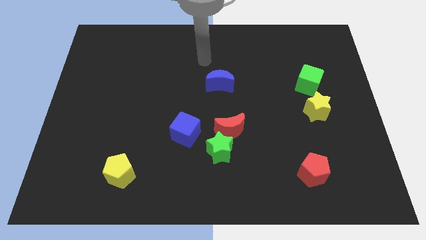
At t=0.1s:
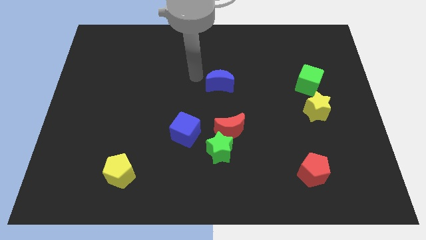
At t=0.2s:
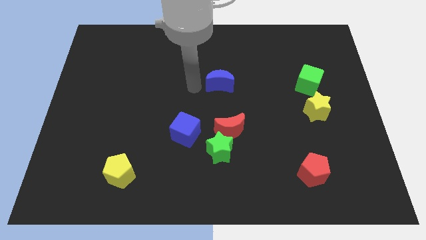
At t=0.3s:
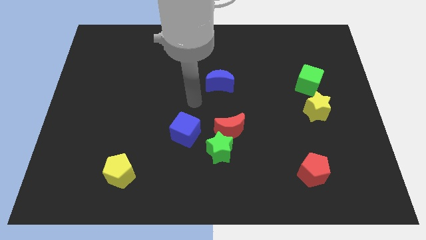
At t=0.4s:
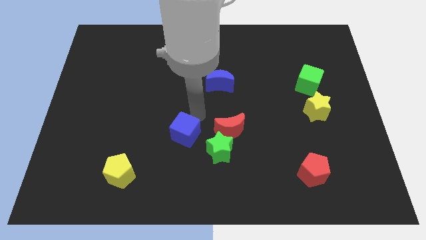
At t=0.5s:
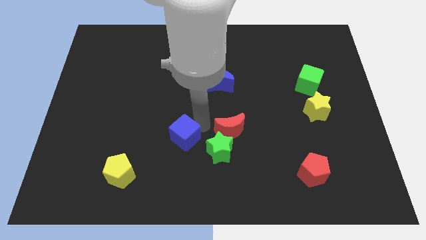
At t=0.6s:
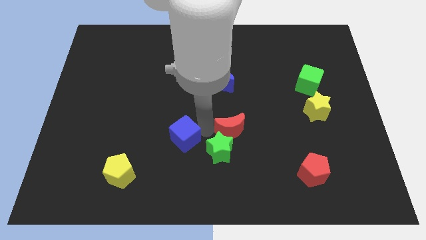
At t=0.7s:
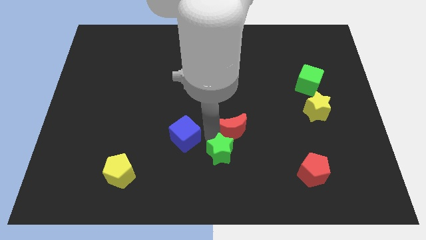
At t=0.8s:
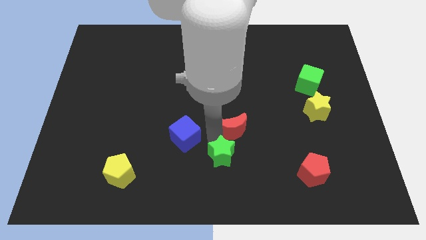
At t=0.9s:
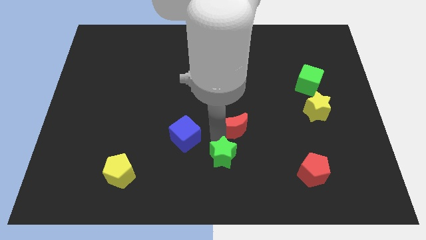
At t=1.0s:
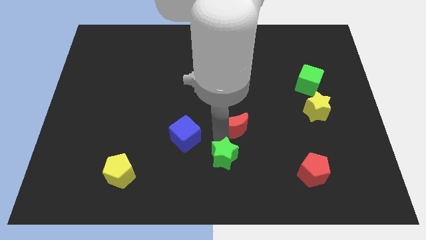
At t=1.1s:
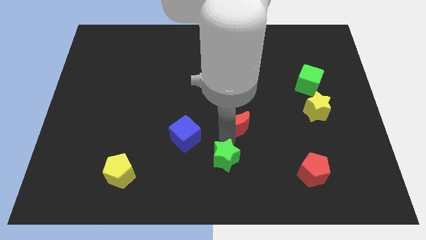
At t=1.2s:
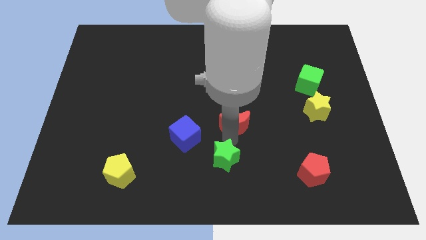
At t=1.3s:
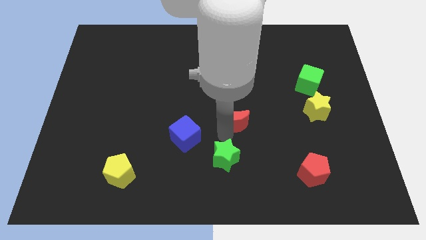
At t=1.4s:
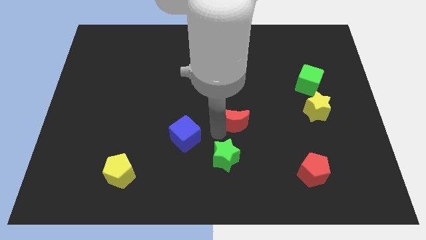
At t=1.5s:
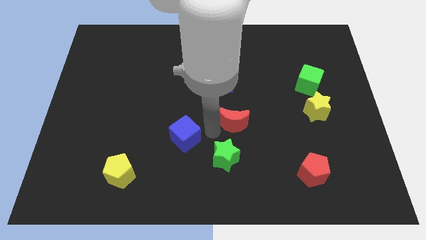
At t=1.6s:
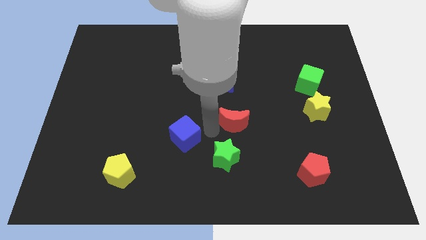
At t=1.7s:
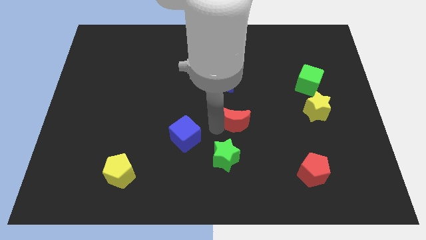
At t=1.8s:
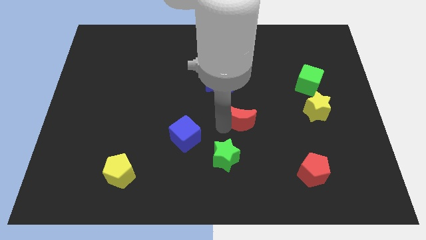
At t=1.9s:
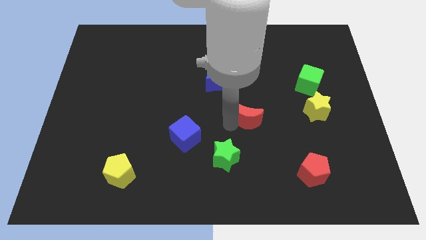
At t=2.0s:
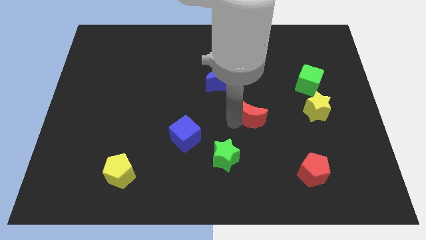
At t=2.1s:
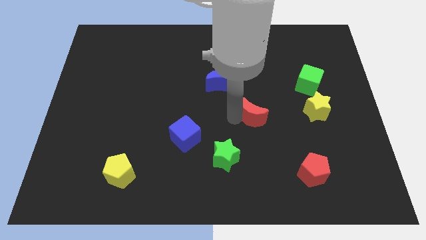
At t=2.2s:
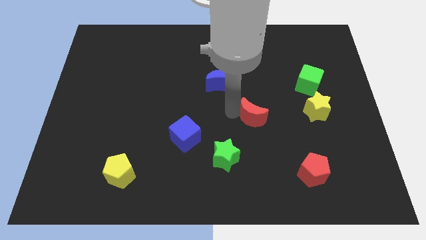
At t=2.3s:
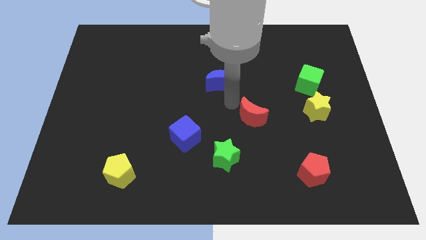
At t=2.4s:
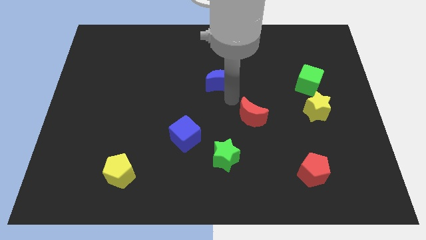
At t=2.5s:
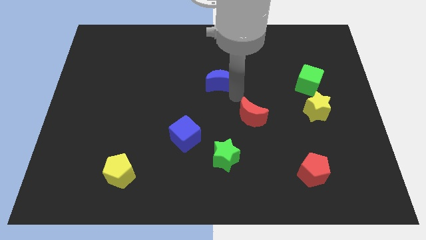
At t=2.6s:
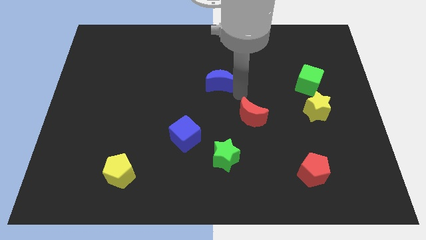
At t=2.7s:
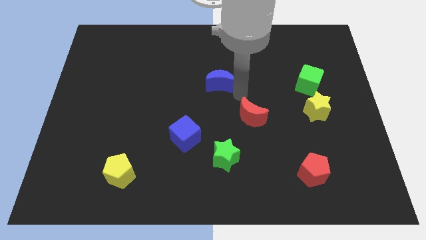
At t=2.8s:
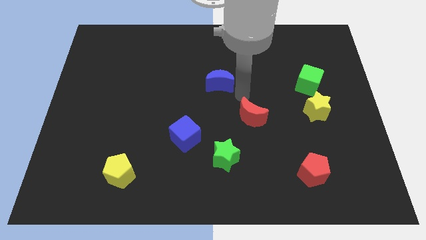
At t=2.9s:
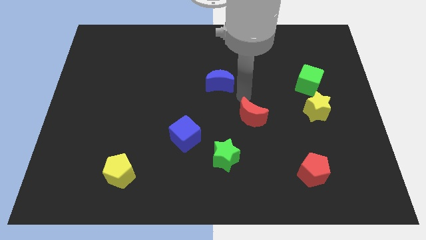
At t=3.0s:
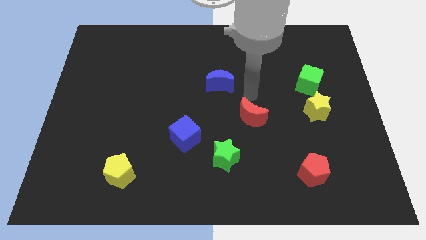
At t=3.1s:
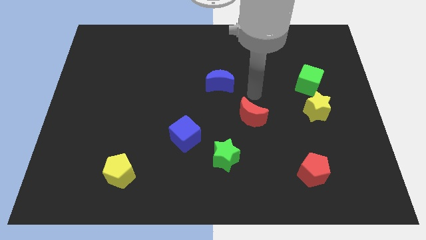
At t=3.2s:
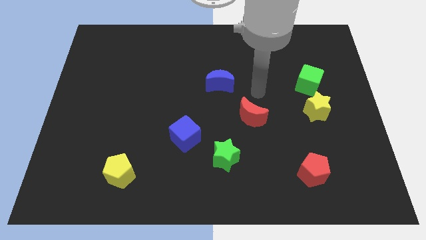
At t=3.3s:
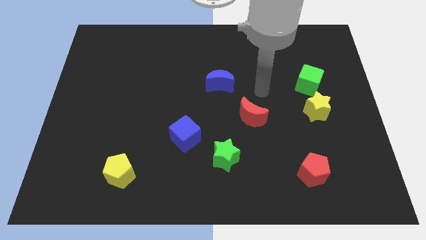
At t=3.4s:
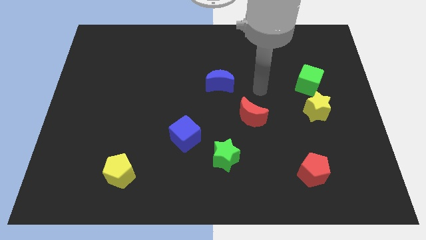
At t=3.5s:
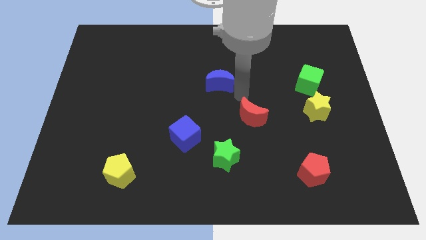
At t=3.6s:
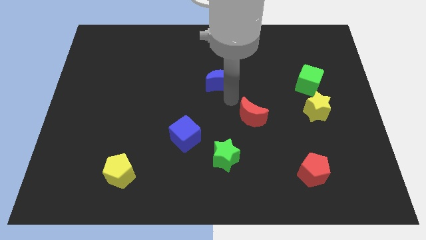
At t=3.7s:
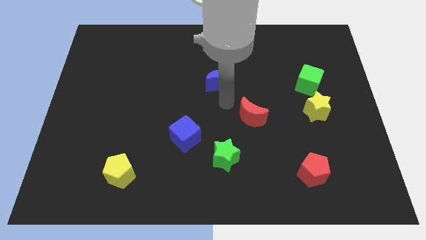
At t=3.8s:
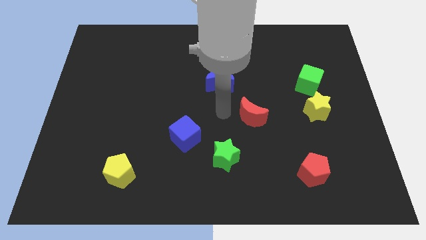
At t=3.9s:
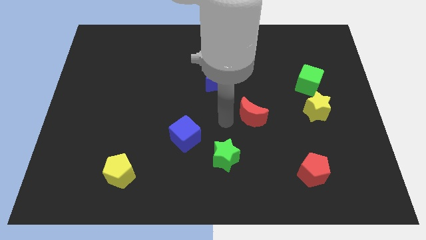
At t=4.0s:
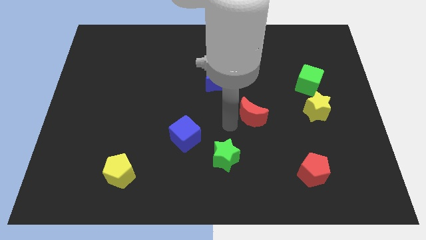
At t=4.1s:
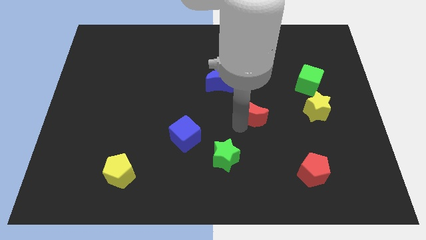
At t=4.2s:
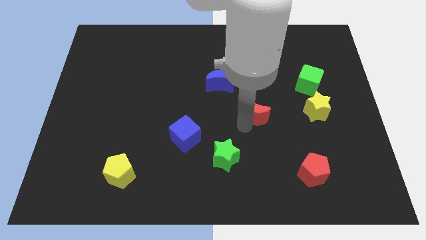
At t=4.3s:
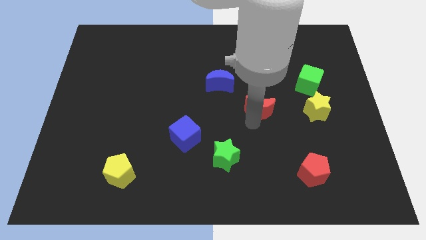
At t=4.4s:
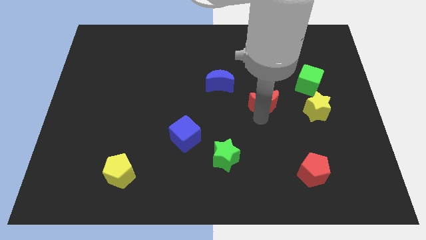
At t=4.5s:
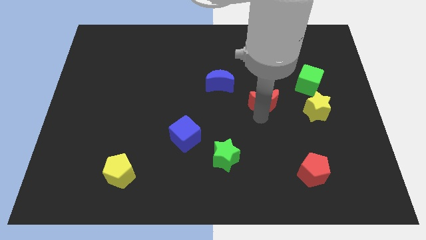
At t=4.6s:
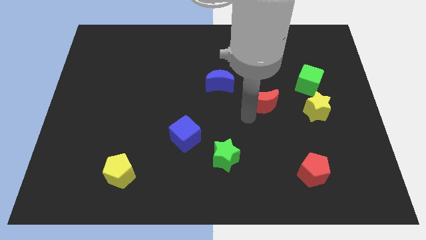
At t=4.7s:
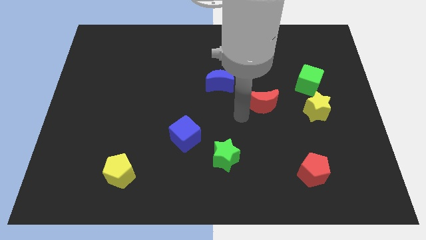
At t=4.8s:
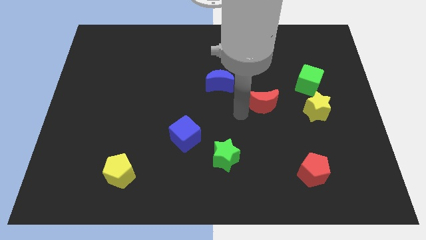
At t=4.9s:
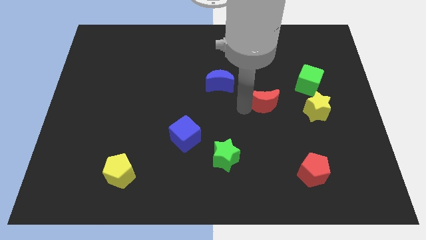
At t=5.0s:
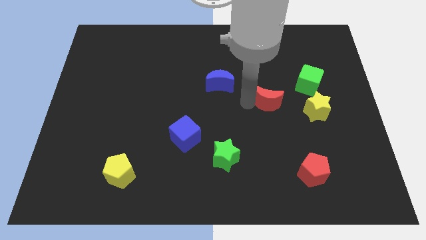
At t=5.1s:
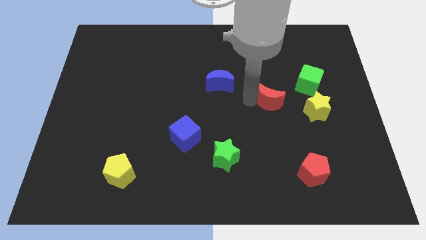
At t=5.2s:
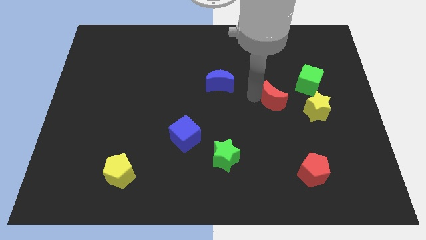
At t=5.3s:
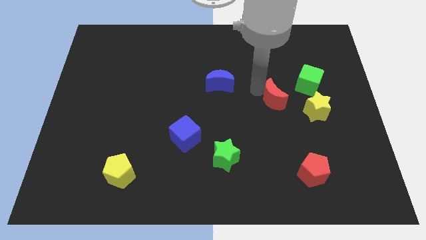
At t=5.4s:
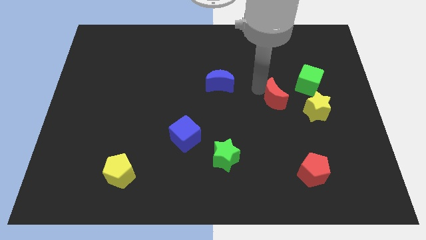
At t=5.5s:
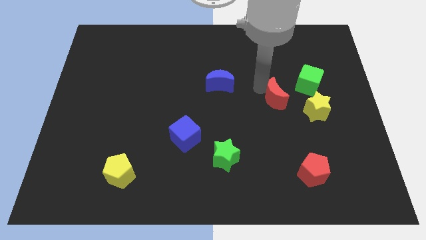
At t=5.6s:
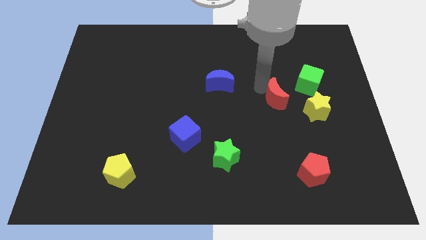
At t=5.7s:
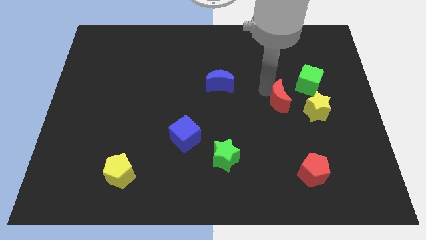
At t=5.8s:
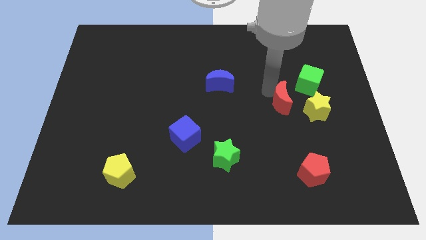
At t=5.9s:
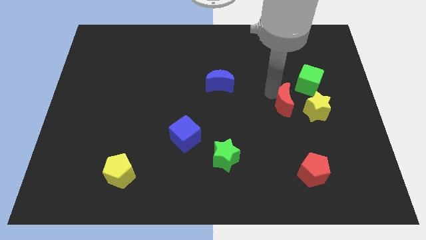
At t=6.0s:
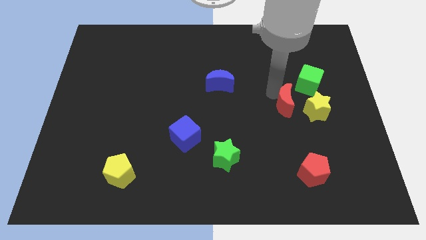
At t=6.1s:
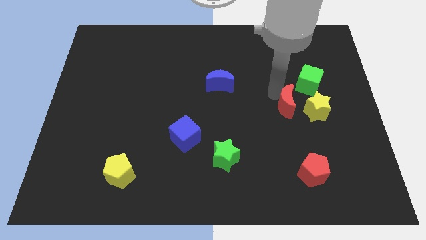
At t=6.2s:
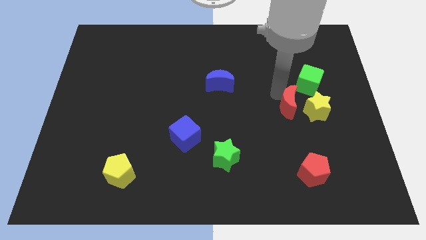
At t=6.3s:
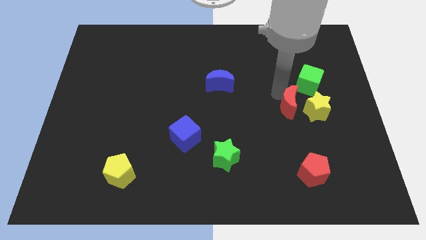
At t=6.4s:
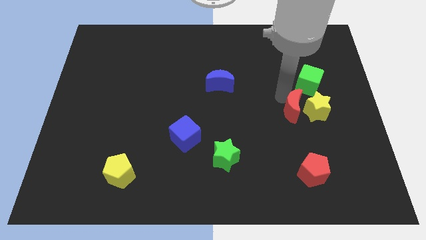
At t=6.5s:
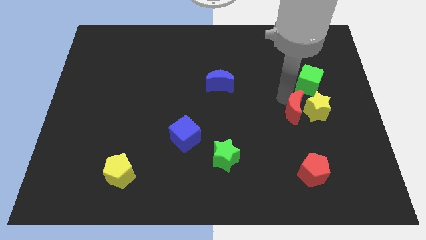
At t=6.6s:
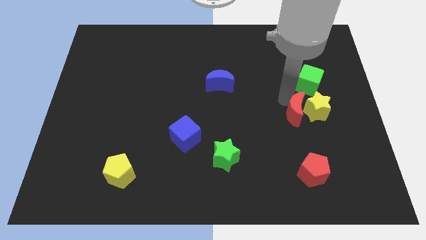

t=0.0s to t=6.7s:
put the red moon towards the yellow star

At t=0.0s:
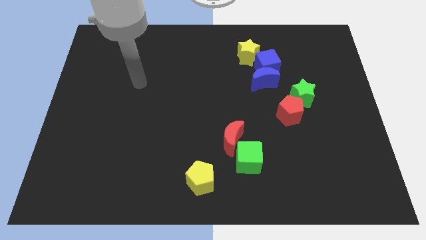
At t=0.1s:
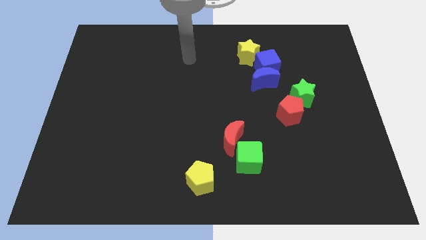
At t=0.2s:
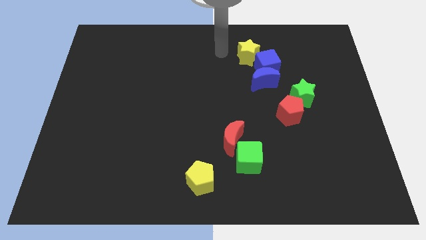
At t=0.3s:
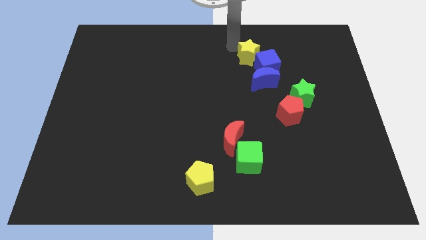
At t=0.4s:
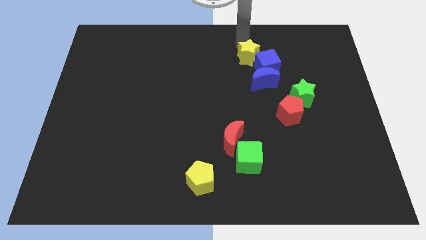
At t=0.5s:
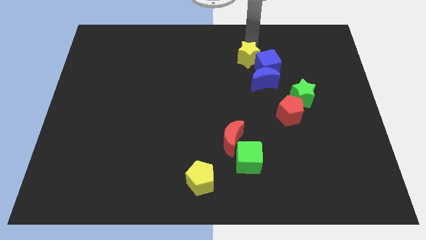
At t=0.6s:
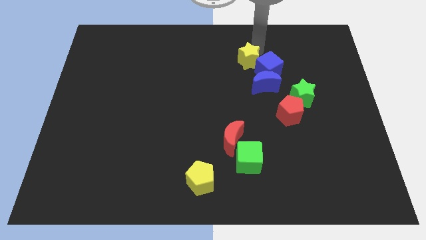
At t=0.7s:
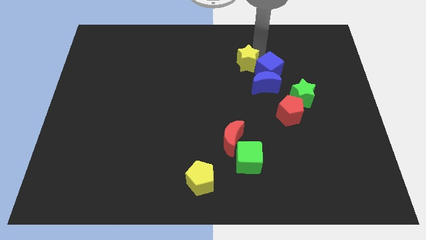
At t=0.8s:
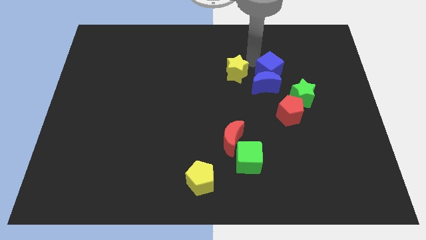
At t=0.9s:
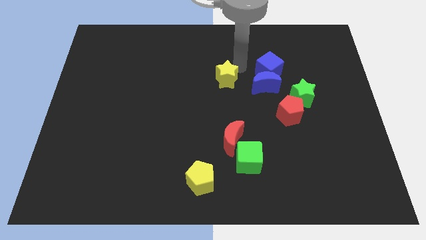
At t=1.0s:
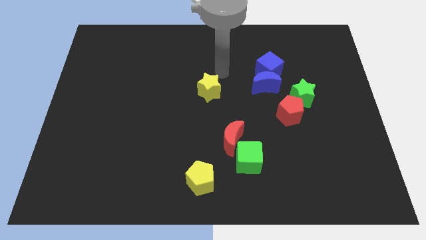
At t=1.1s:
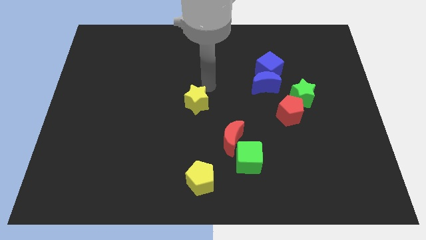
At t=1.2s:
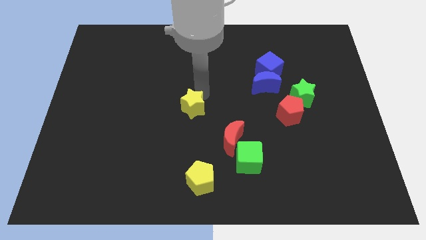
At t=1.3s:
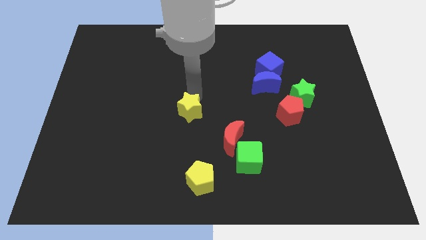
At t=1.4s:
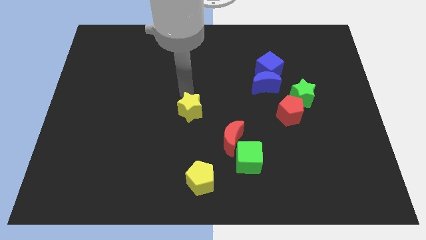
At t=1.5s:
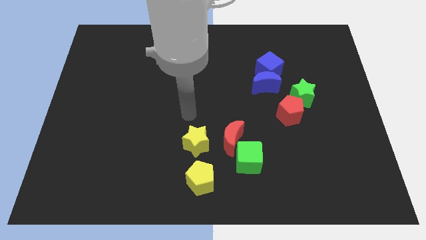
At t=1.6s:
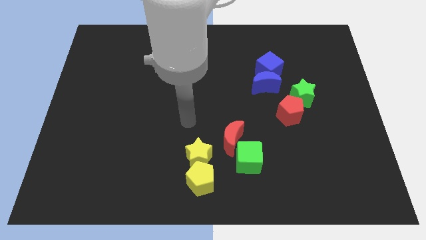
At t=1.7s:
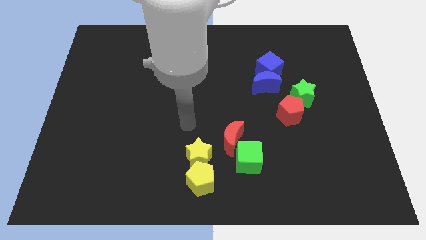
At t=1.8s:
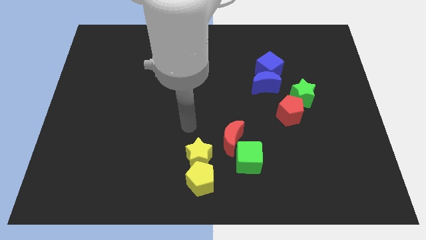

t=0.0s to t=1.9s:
put the yellow star towards the yellow pentagon
